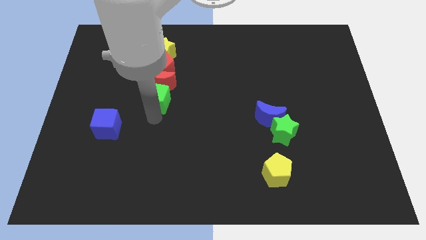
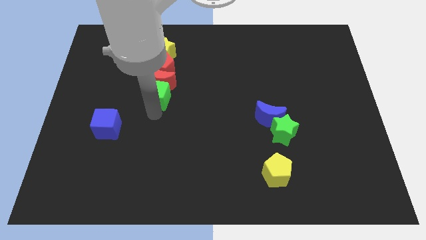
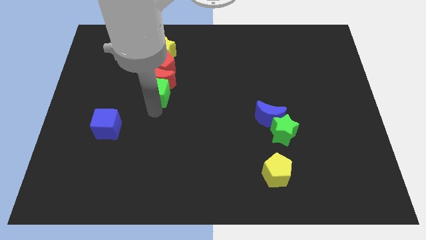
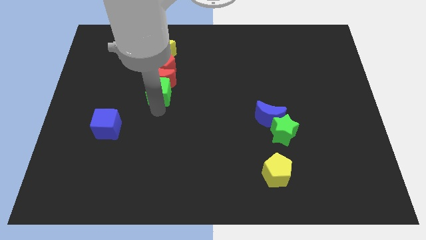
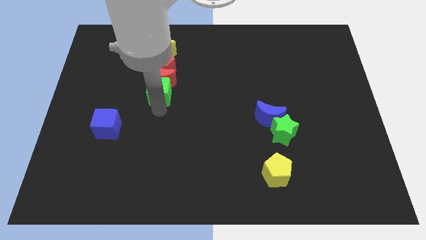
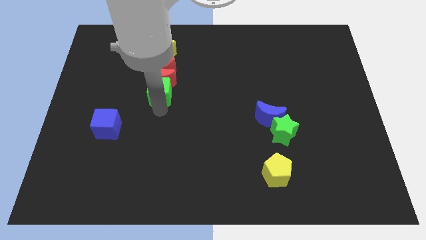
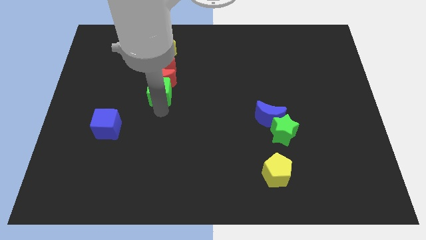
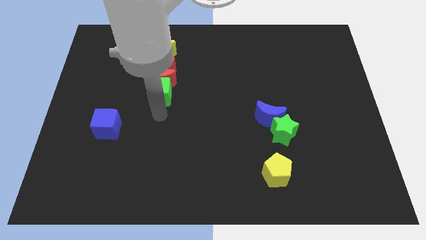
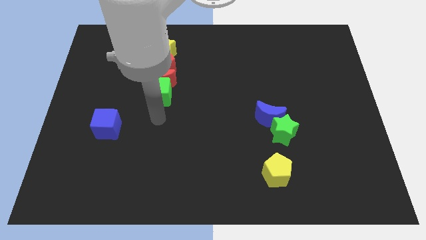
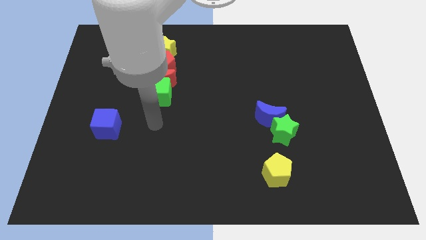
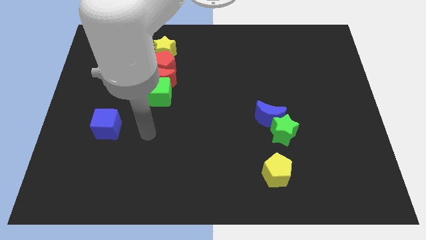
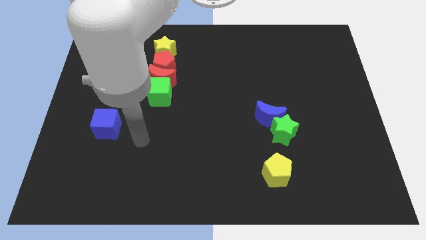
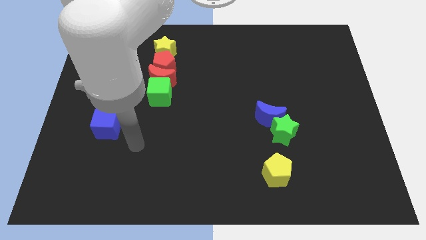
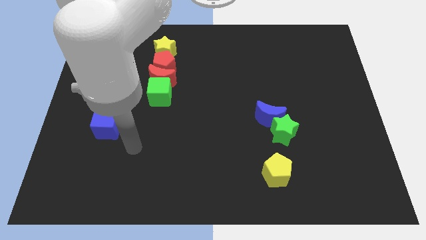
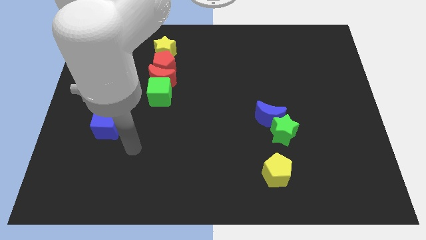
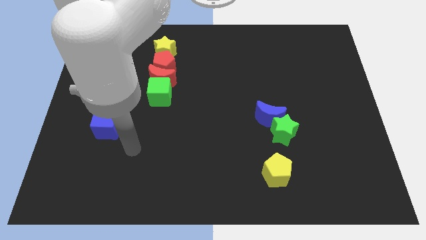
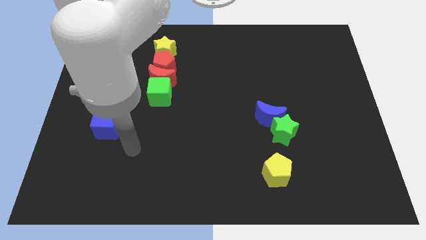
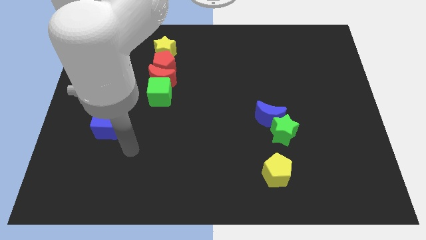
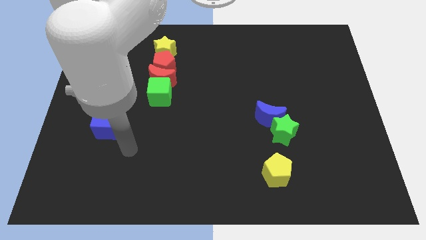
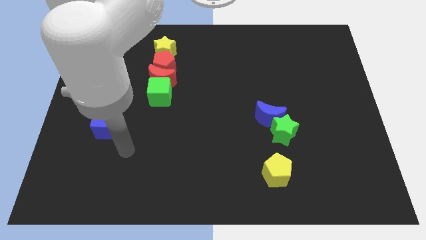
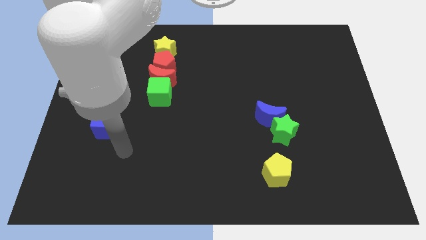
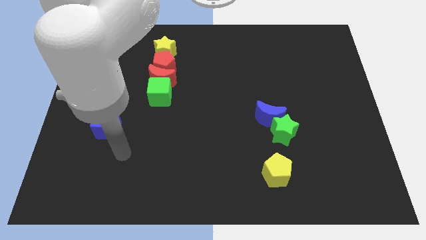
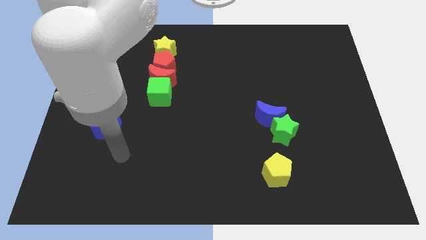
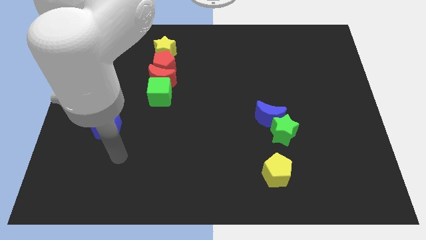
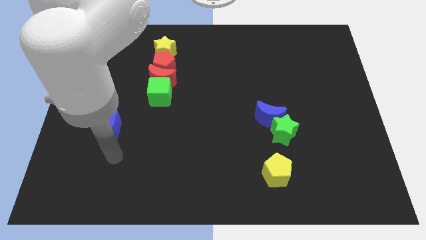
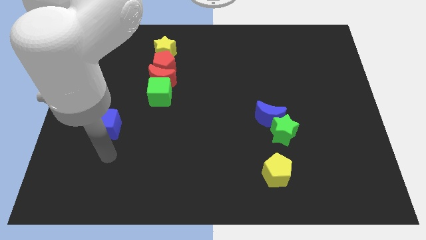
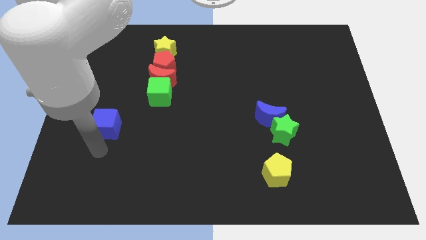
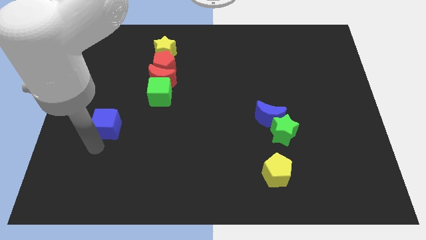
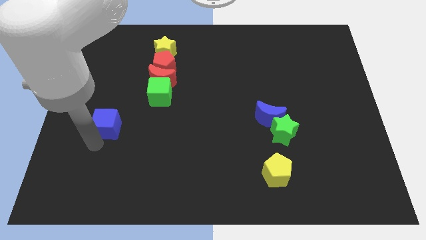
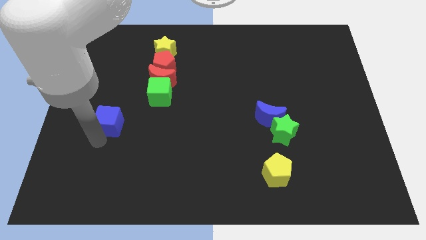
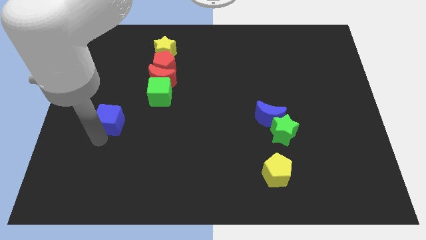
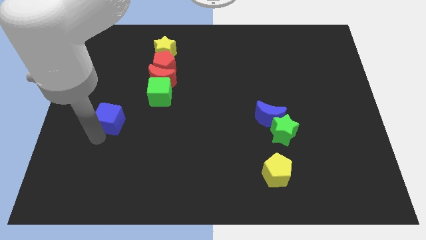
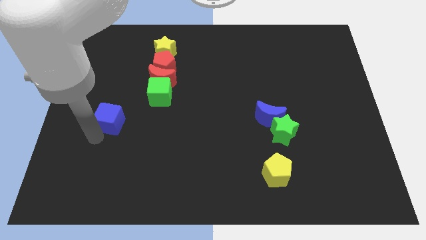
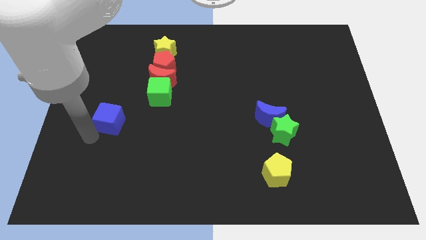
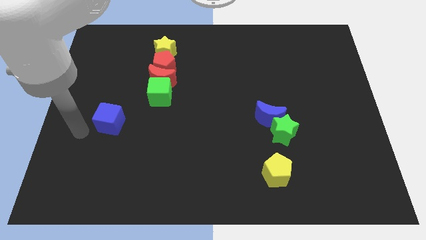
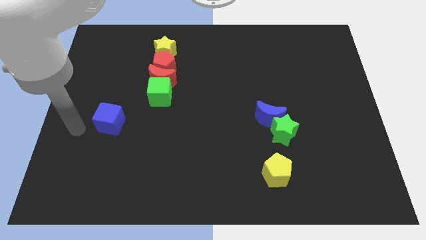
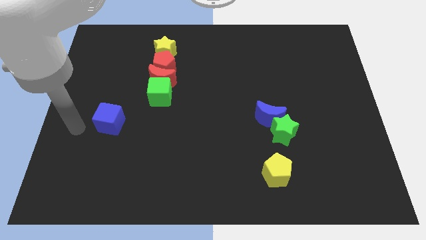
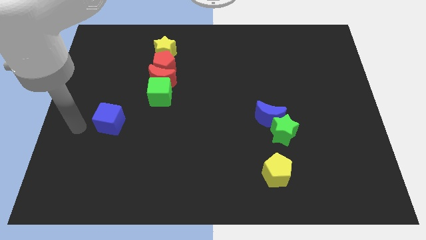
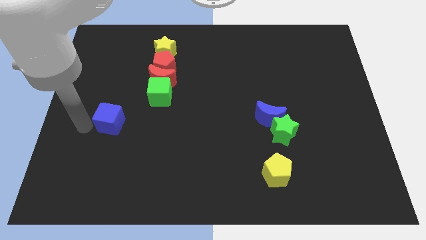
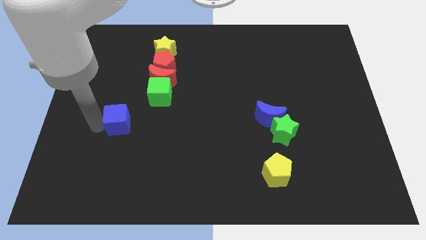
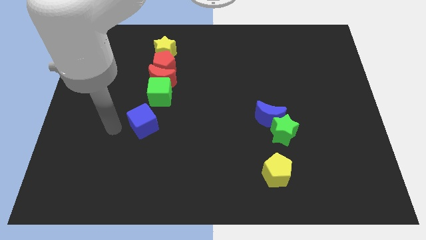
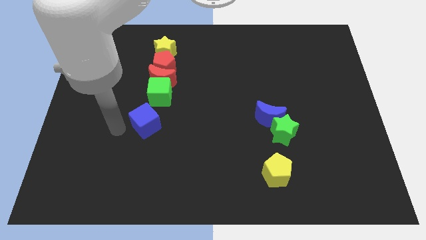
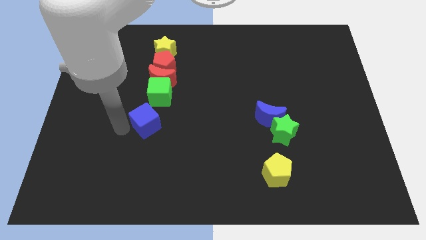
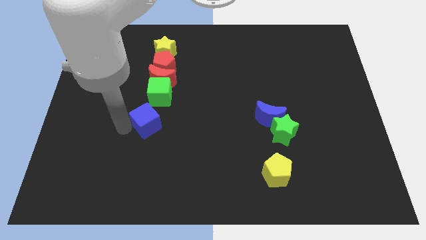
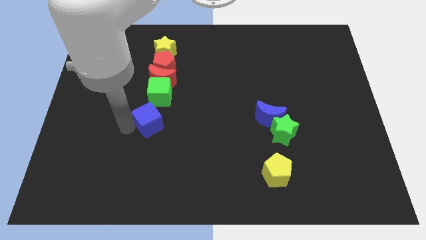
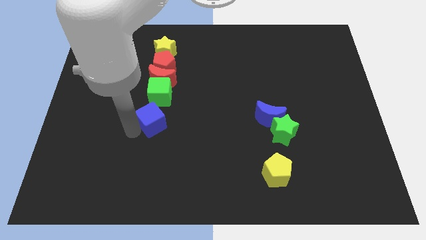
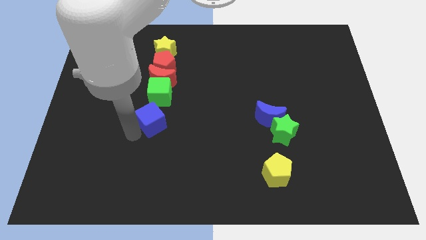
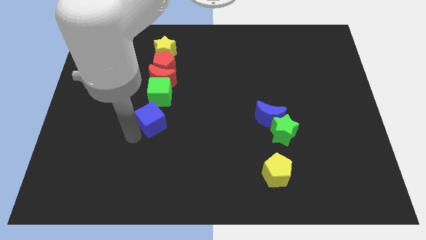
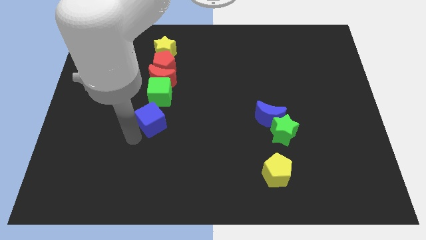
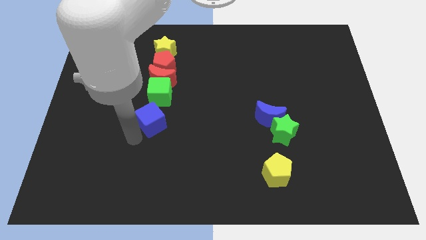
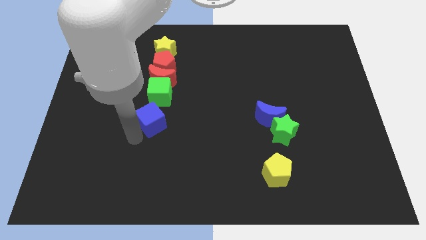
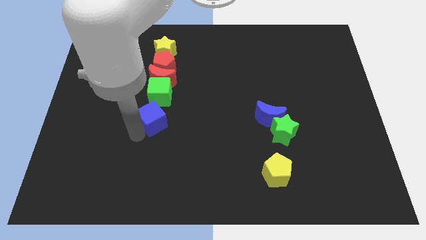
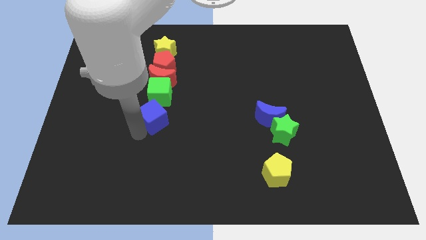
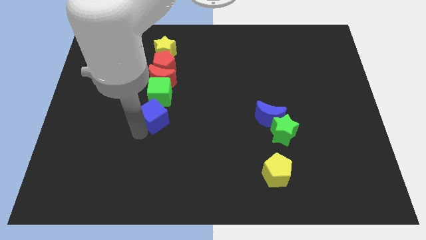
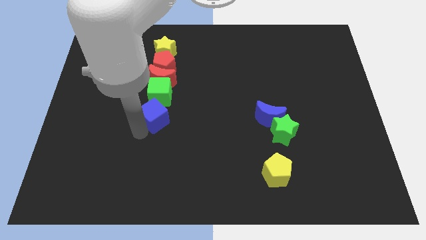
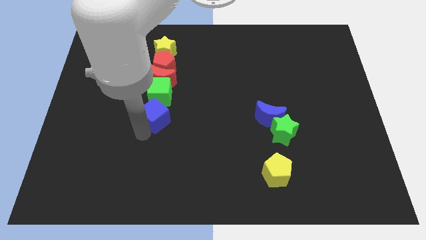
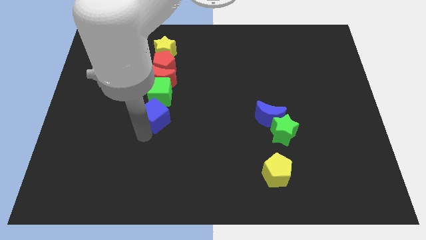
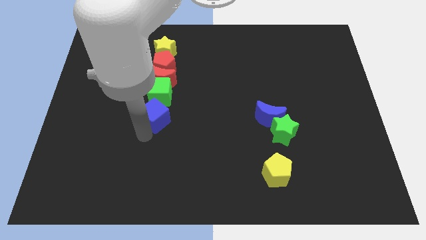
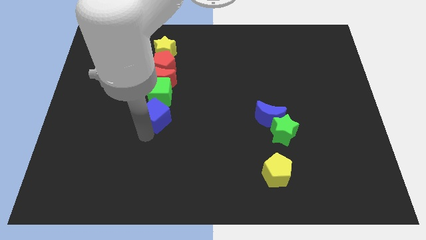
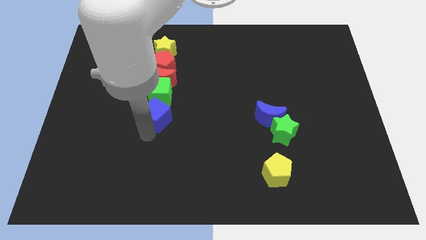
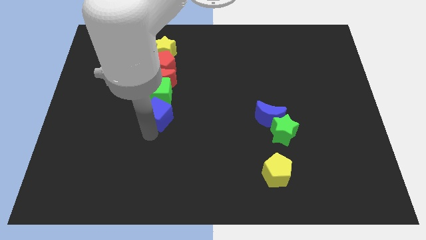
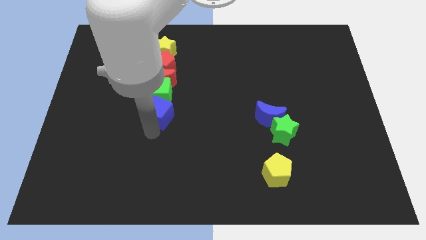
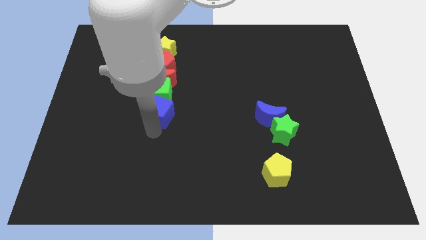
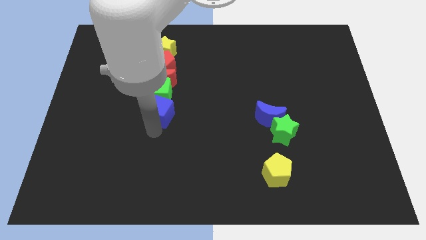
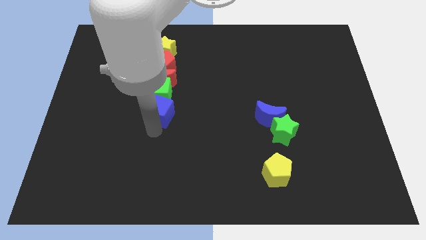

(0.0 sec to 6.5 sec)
move the blue cube diagonal to the yellow pentagon

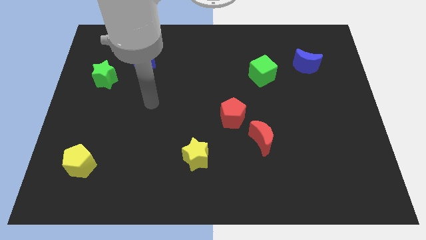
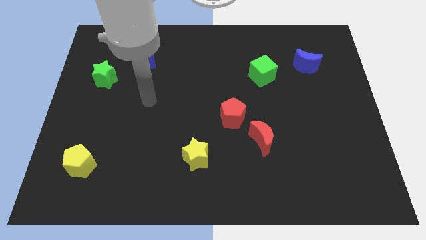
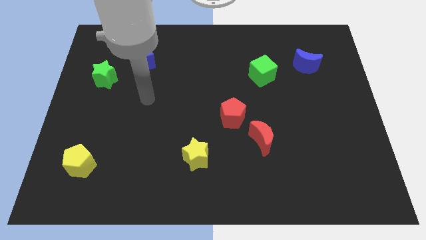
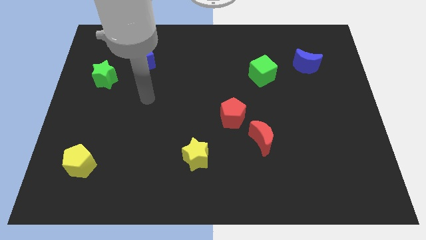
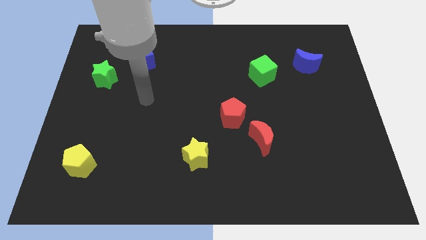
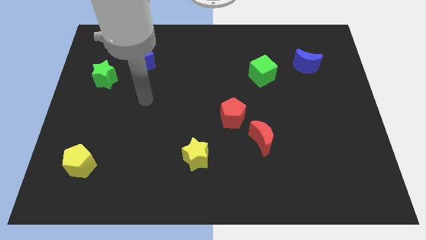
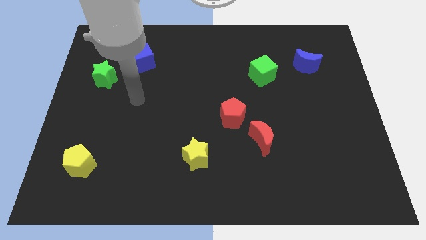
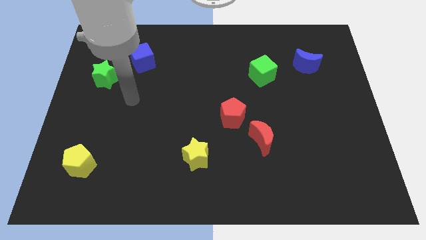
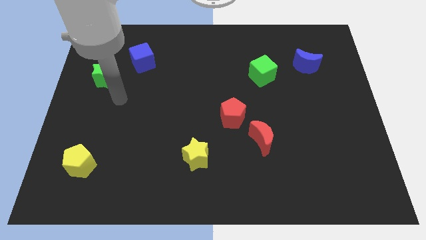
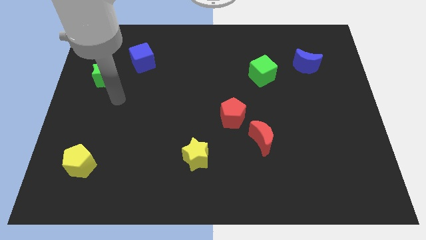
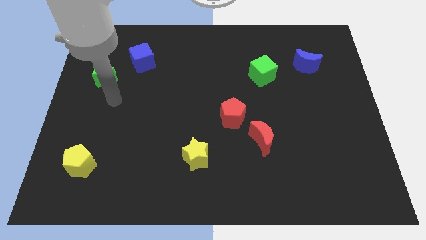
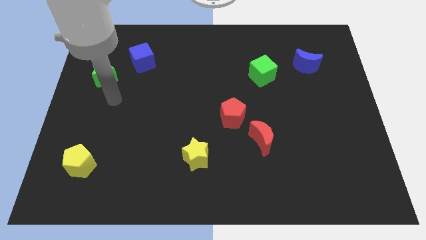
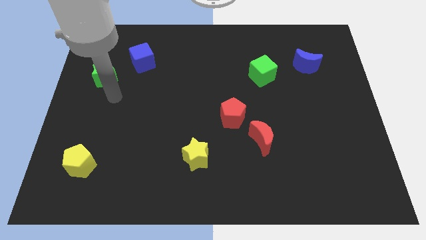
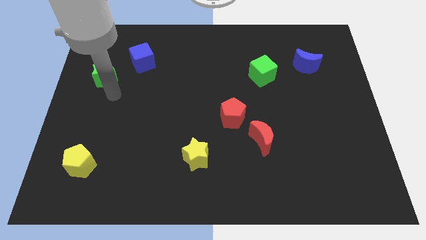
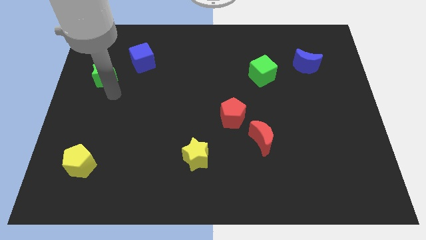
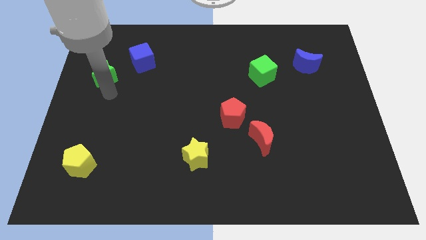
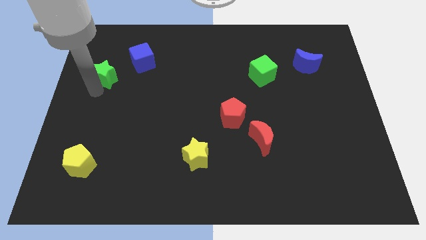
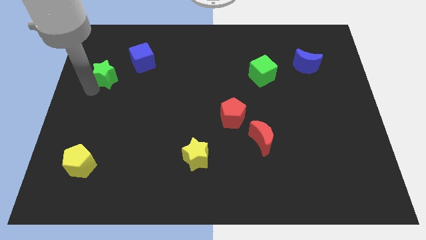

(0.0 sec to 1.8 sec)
push arm on the bottom of green star

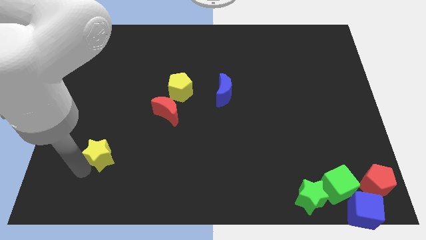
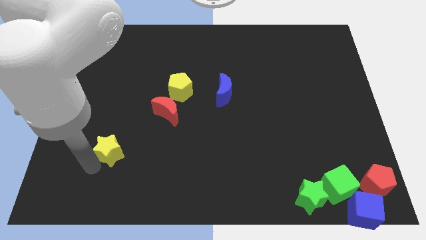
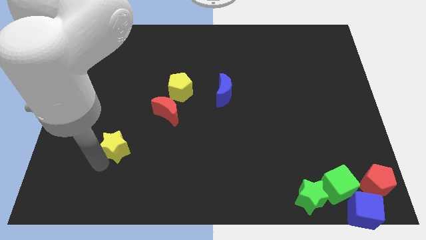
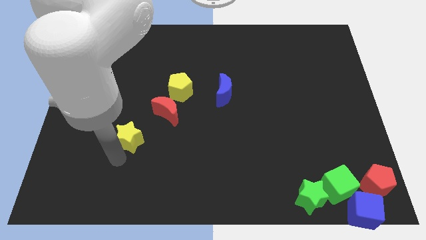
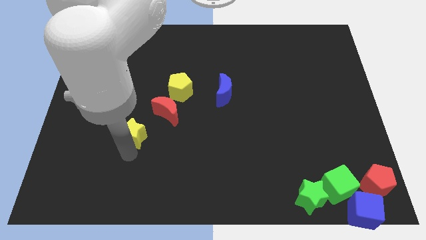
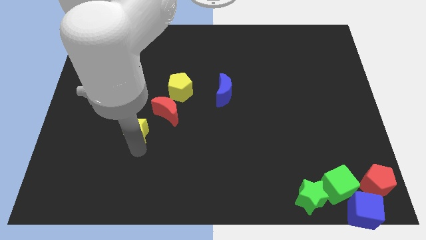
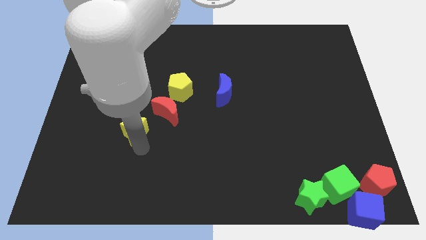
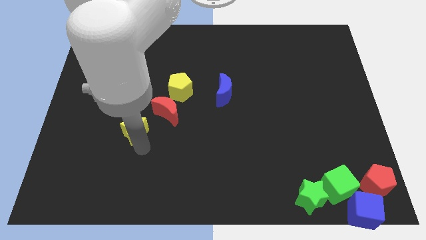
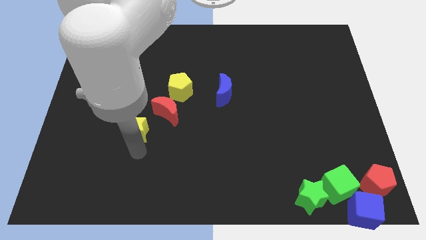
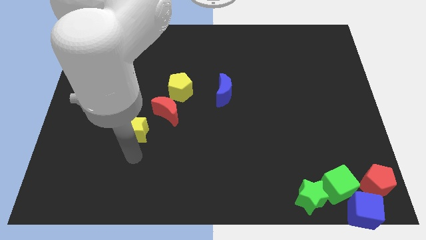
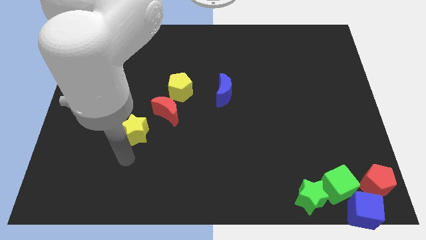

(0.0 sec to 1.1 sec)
push the yellow star towards the center
